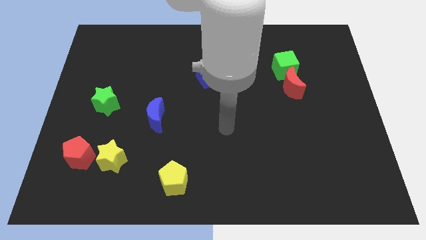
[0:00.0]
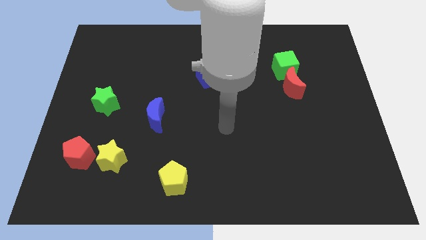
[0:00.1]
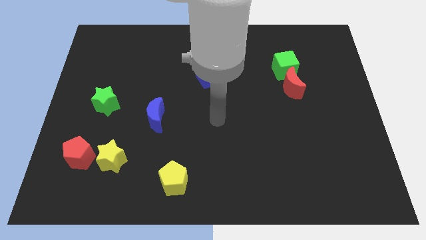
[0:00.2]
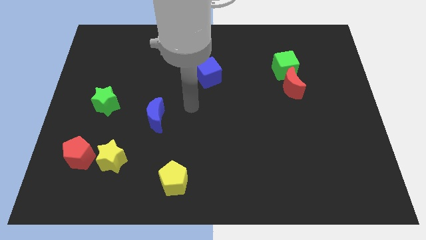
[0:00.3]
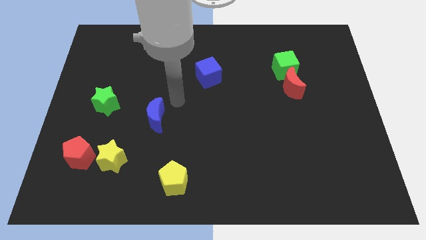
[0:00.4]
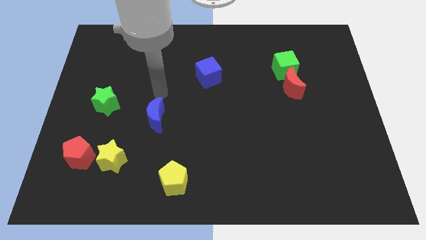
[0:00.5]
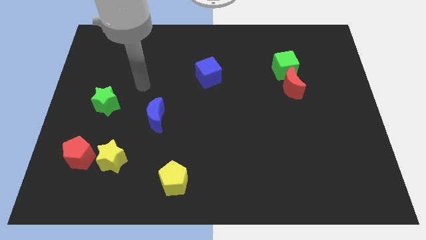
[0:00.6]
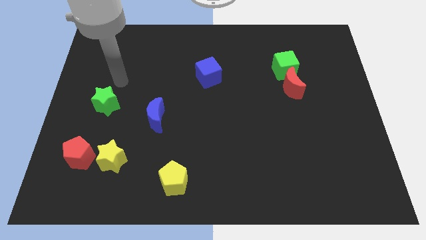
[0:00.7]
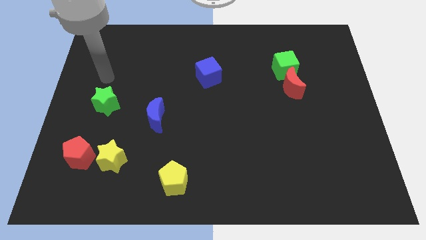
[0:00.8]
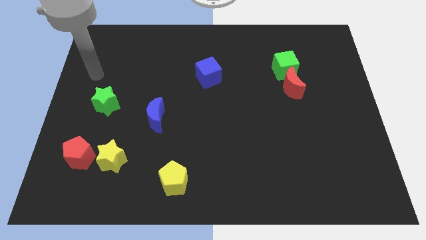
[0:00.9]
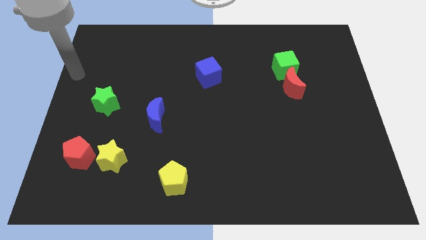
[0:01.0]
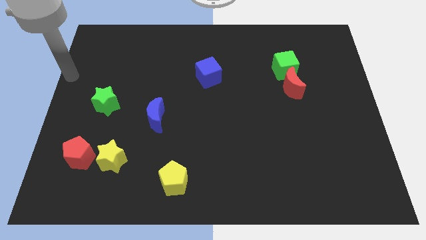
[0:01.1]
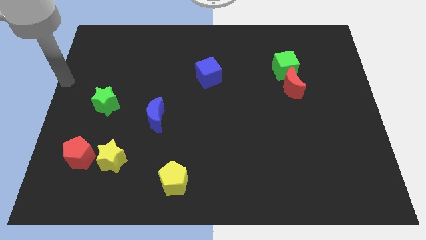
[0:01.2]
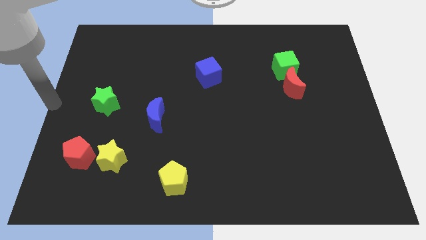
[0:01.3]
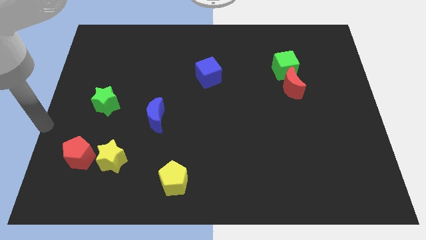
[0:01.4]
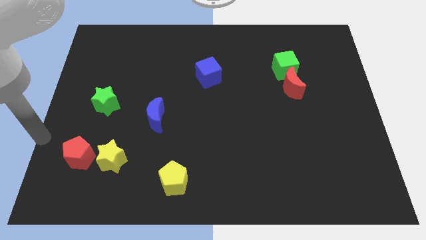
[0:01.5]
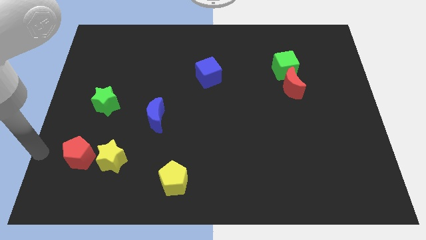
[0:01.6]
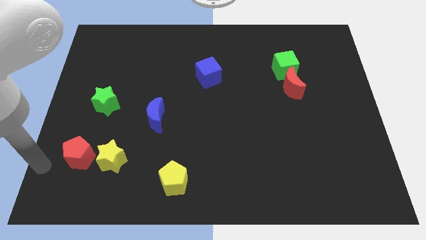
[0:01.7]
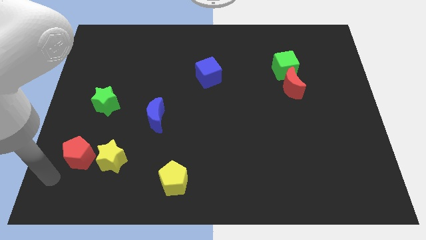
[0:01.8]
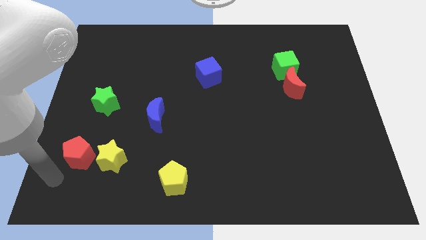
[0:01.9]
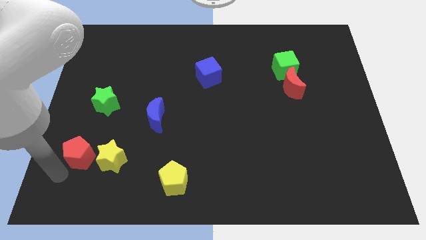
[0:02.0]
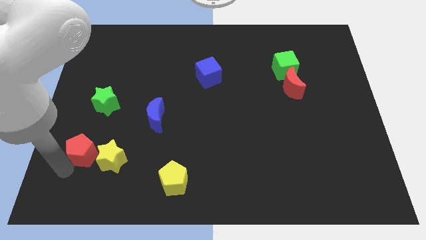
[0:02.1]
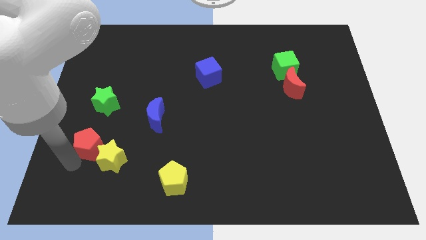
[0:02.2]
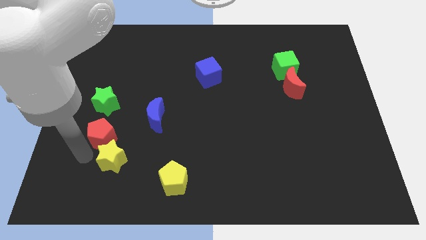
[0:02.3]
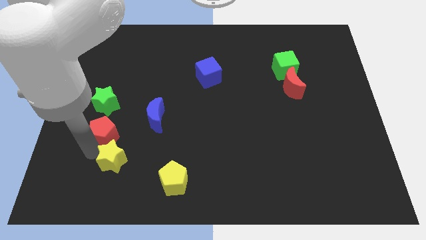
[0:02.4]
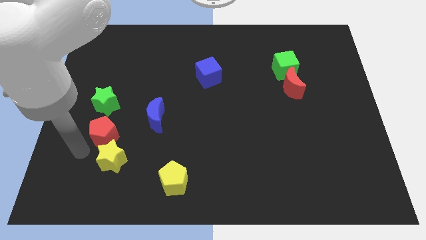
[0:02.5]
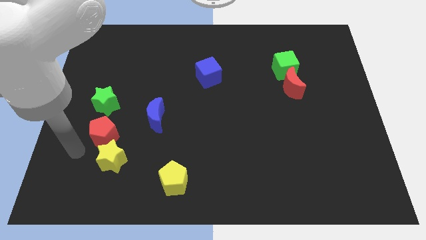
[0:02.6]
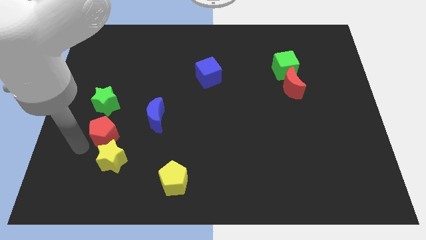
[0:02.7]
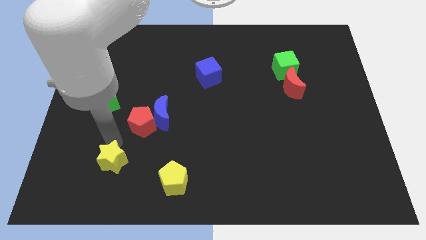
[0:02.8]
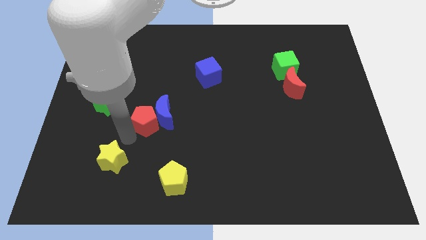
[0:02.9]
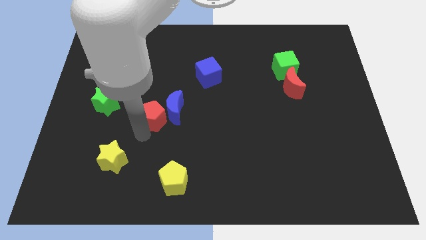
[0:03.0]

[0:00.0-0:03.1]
put the red pentagon close to the blue moon

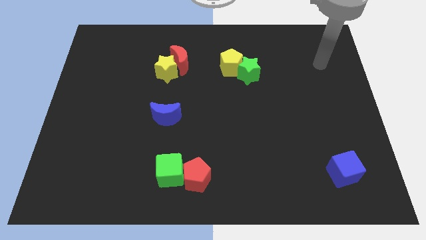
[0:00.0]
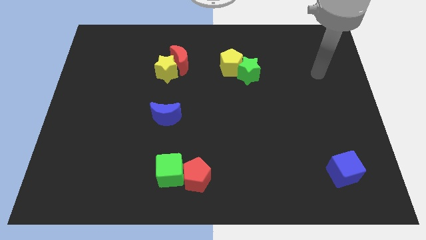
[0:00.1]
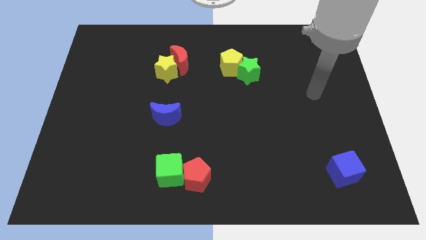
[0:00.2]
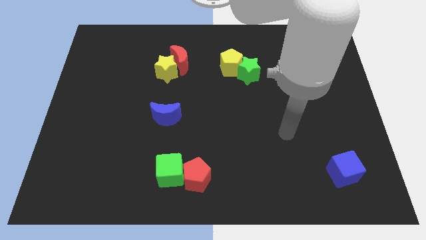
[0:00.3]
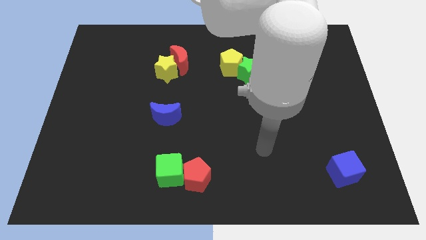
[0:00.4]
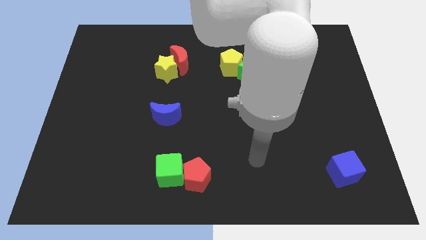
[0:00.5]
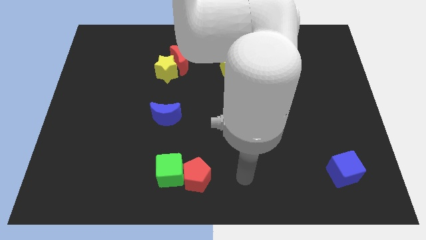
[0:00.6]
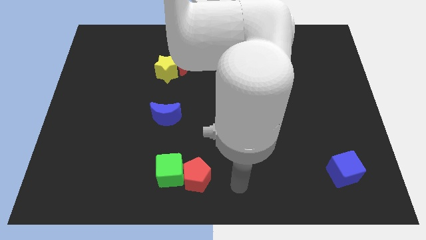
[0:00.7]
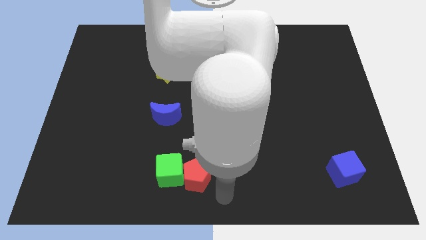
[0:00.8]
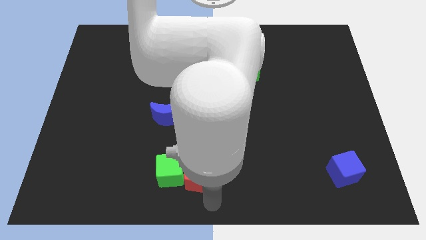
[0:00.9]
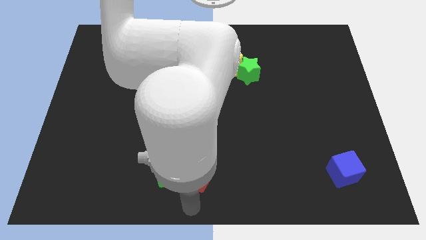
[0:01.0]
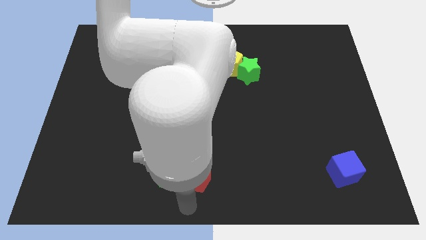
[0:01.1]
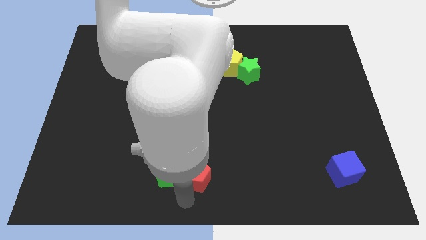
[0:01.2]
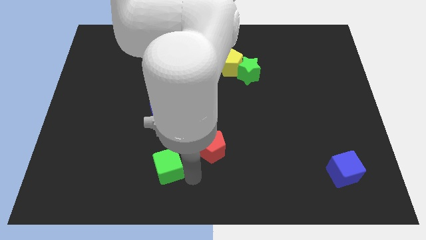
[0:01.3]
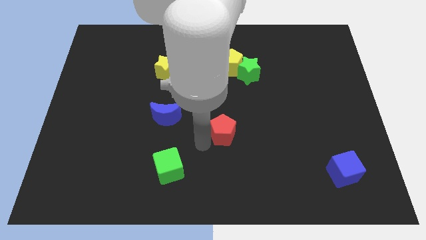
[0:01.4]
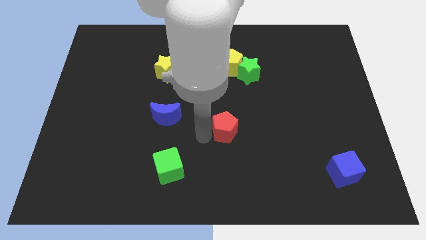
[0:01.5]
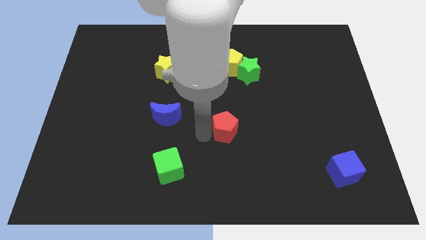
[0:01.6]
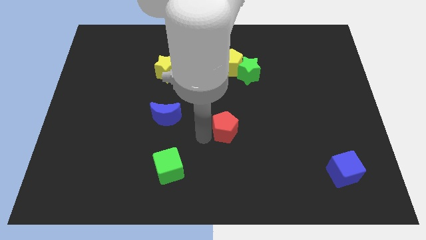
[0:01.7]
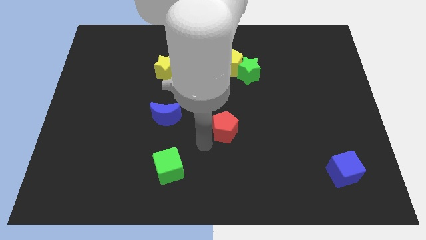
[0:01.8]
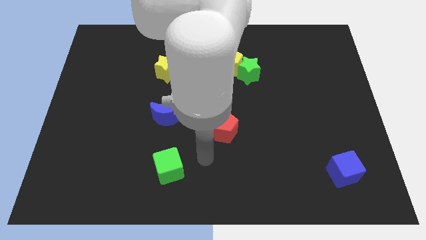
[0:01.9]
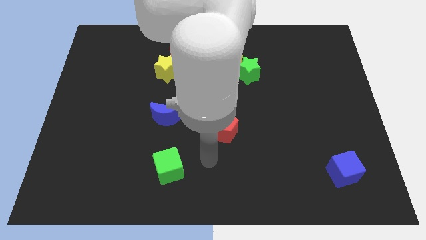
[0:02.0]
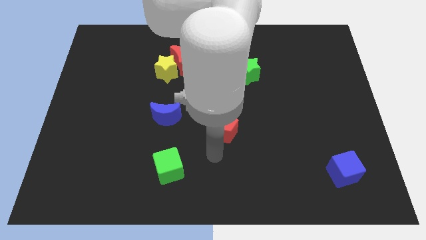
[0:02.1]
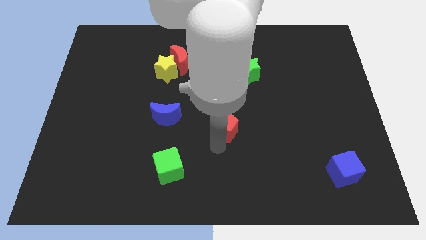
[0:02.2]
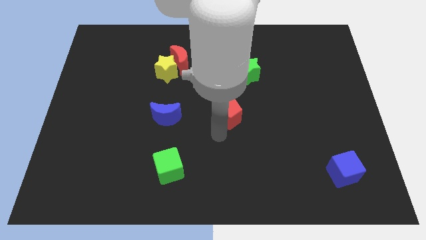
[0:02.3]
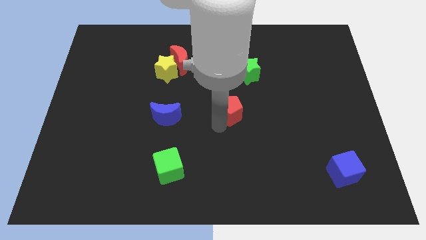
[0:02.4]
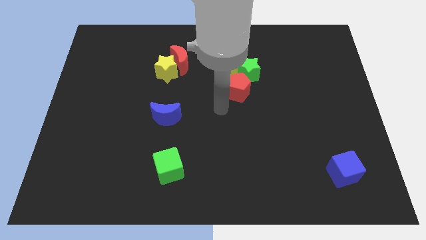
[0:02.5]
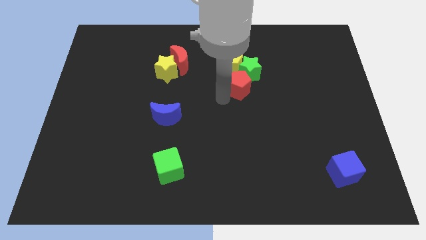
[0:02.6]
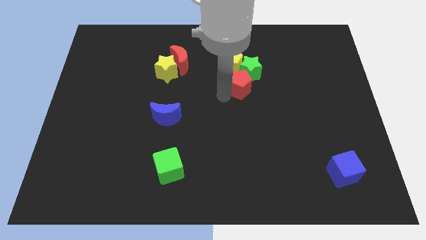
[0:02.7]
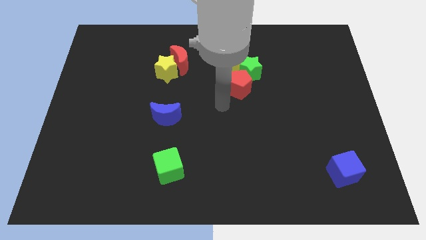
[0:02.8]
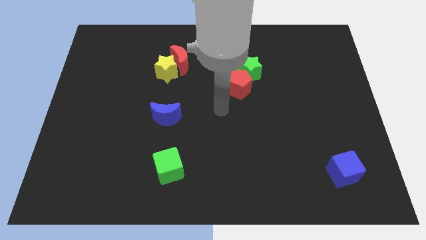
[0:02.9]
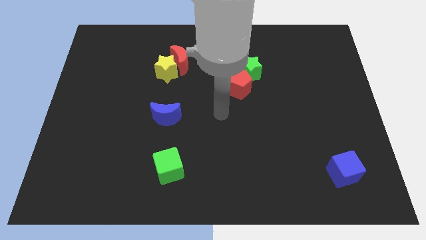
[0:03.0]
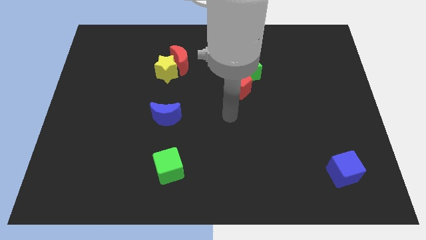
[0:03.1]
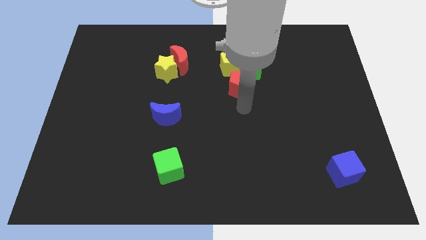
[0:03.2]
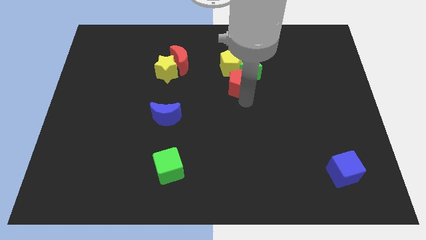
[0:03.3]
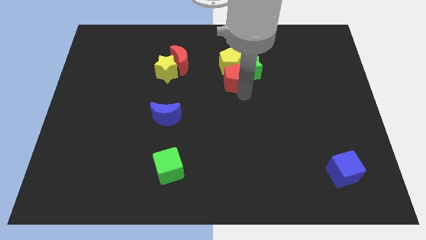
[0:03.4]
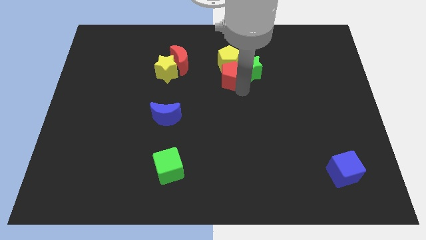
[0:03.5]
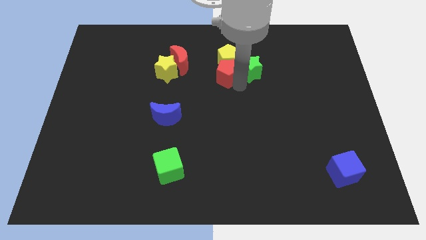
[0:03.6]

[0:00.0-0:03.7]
slide the red pentagon next to the yellow pentagon

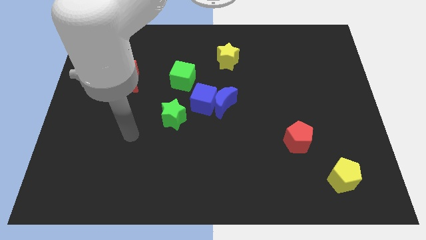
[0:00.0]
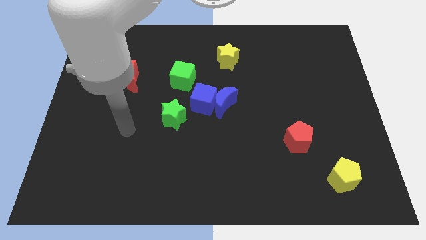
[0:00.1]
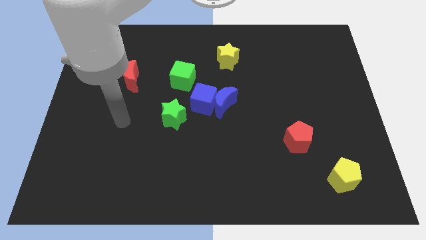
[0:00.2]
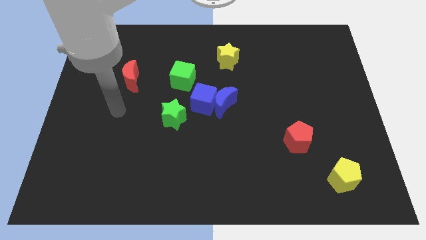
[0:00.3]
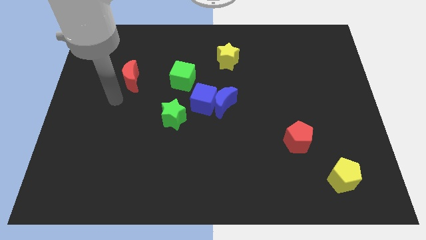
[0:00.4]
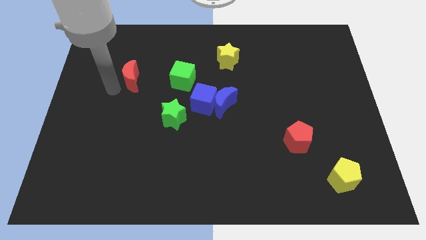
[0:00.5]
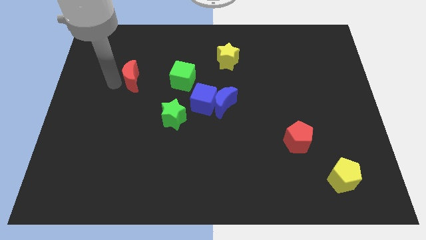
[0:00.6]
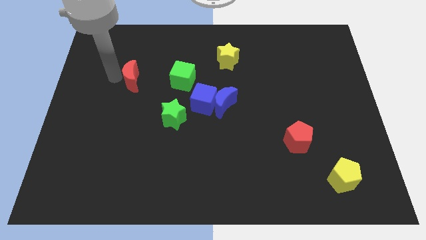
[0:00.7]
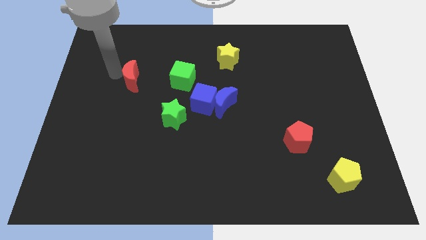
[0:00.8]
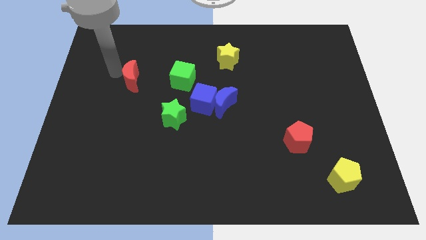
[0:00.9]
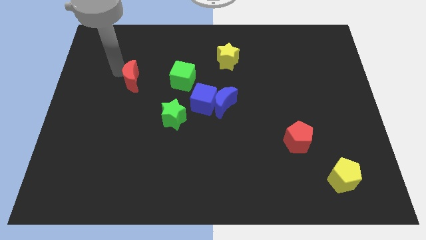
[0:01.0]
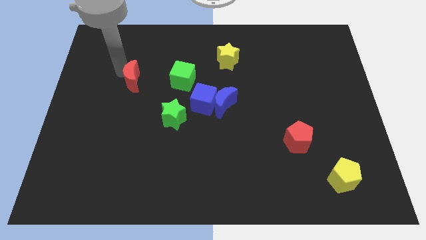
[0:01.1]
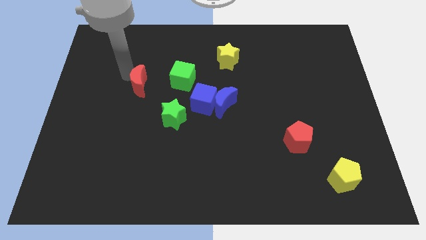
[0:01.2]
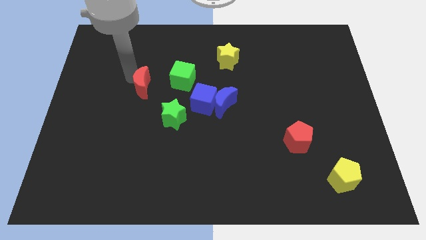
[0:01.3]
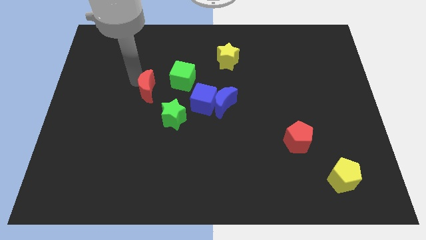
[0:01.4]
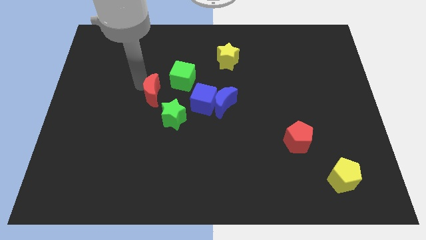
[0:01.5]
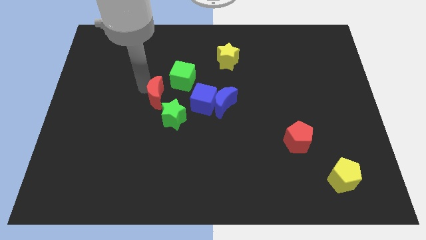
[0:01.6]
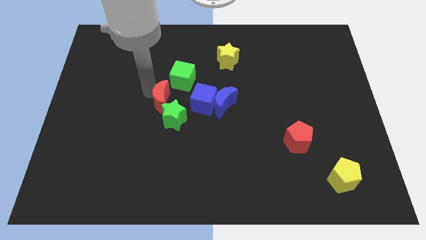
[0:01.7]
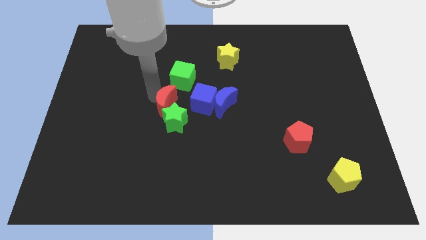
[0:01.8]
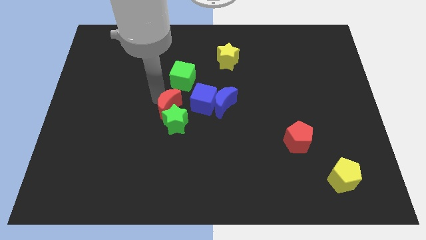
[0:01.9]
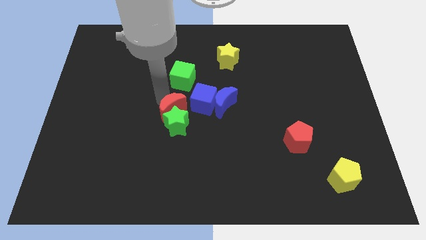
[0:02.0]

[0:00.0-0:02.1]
move the red moon towards the green star
